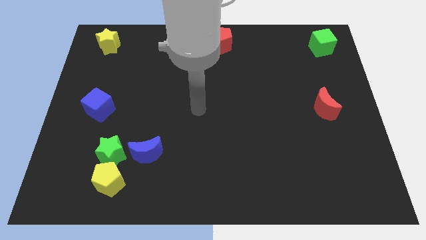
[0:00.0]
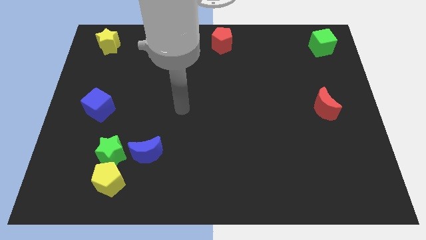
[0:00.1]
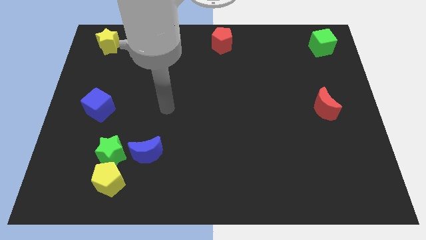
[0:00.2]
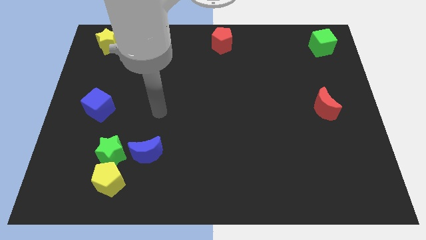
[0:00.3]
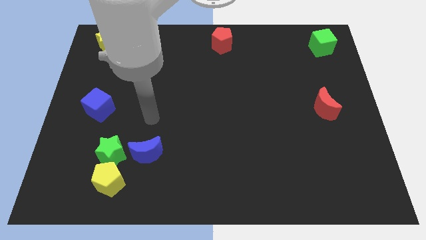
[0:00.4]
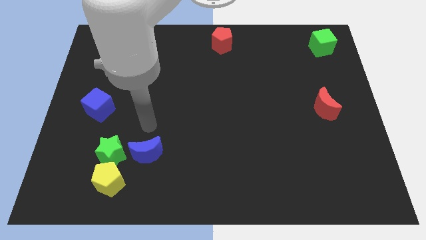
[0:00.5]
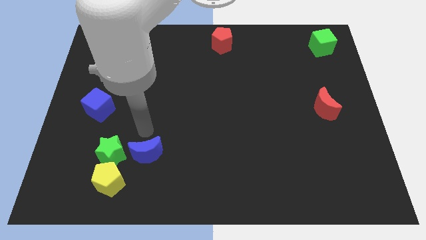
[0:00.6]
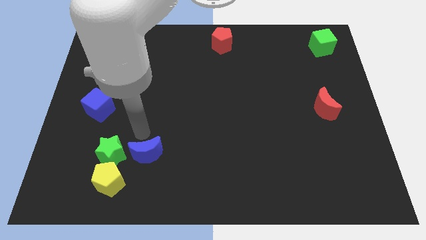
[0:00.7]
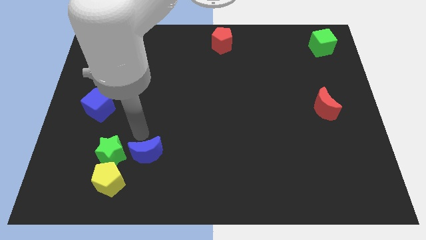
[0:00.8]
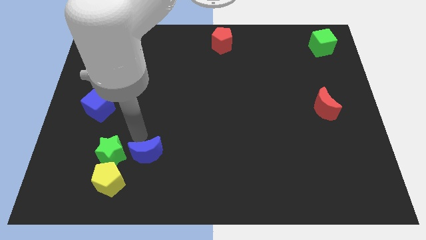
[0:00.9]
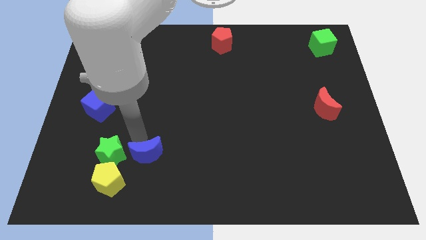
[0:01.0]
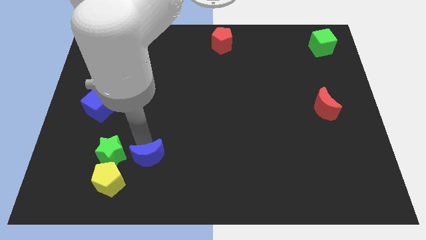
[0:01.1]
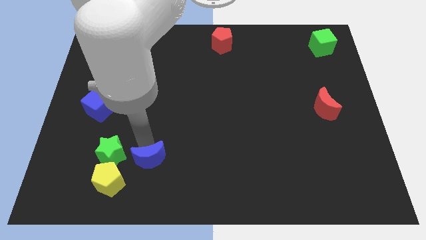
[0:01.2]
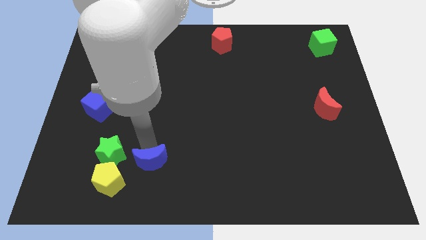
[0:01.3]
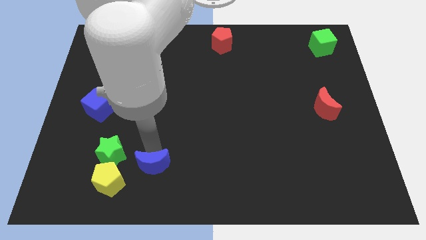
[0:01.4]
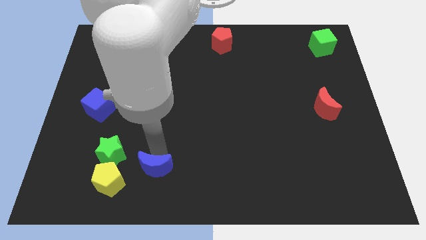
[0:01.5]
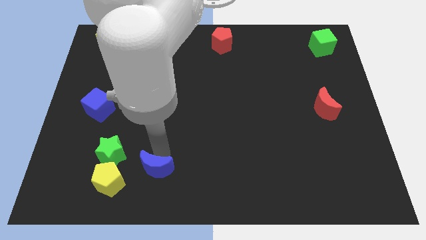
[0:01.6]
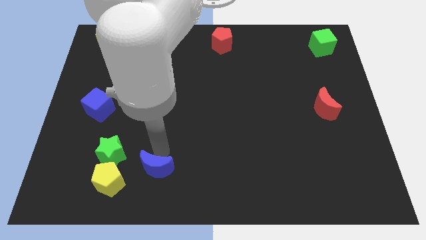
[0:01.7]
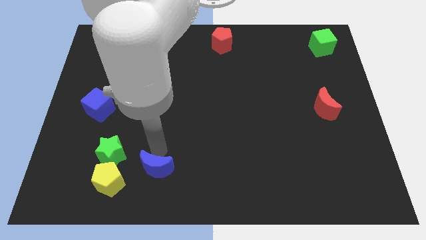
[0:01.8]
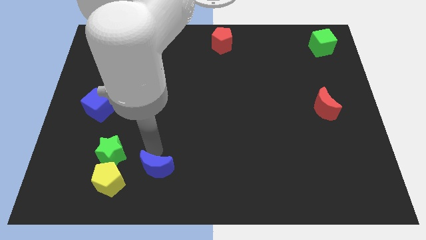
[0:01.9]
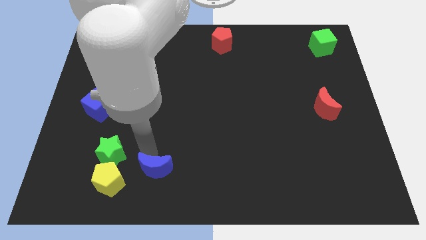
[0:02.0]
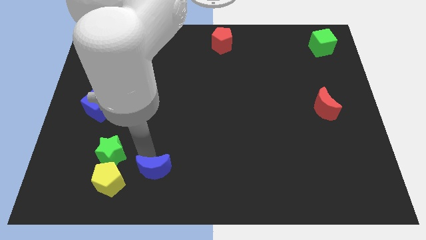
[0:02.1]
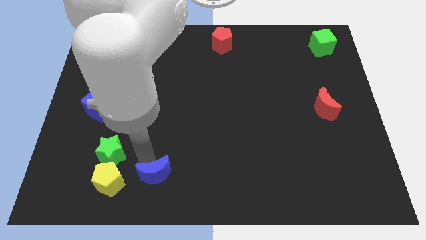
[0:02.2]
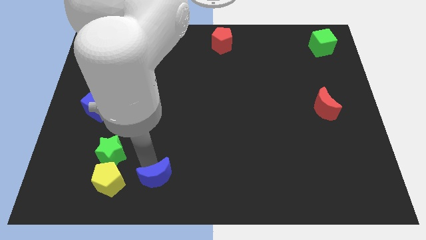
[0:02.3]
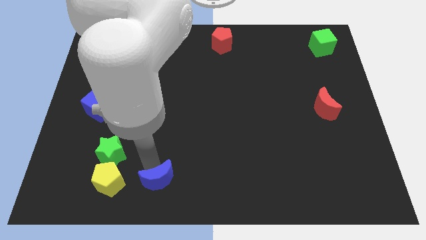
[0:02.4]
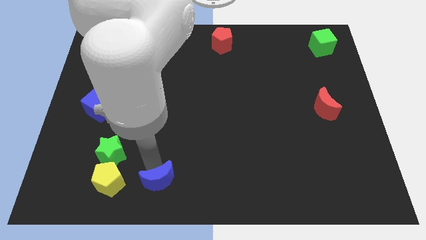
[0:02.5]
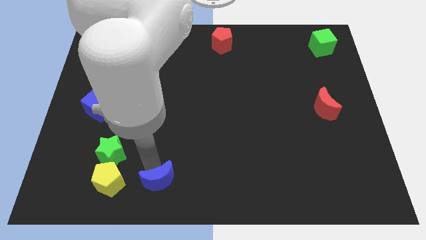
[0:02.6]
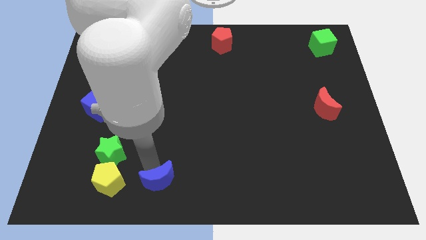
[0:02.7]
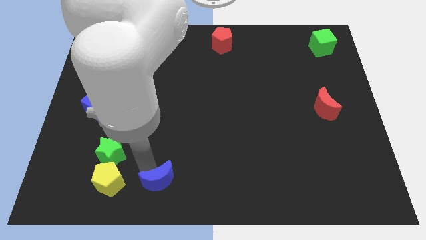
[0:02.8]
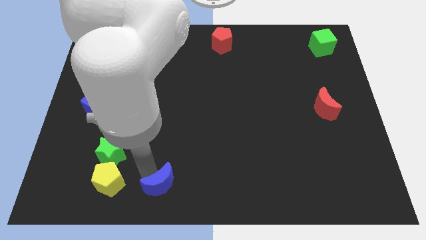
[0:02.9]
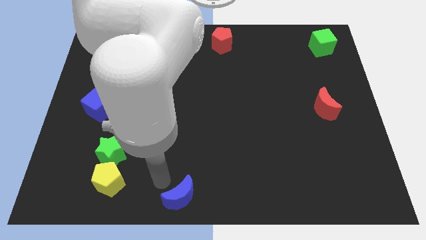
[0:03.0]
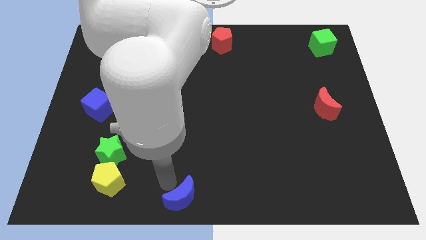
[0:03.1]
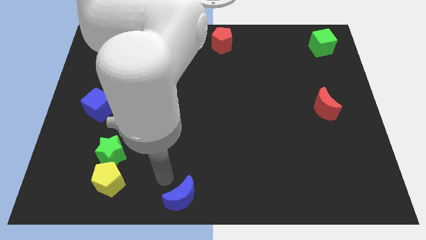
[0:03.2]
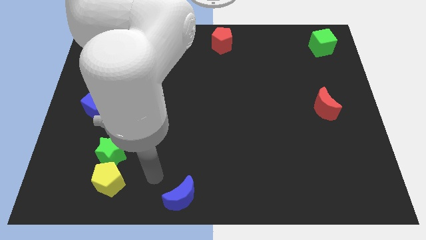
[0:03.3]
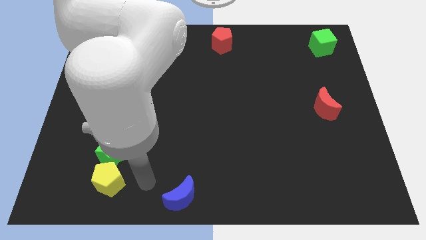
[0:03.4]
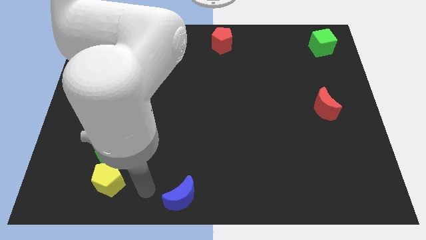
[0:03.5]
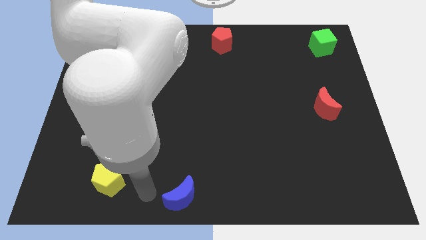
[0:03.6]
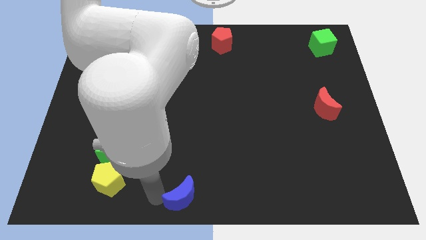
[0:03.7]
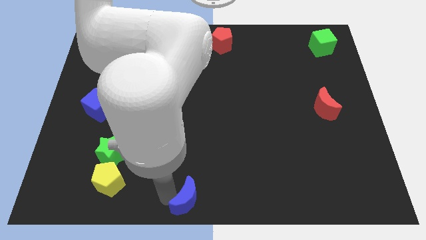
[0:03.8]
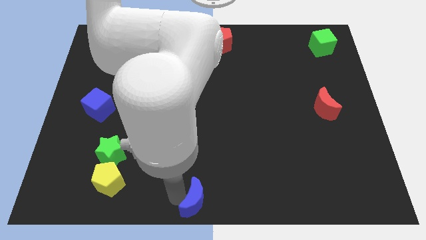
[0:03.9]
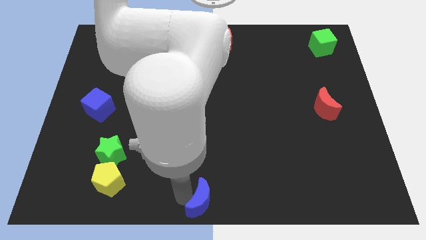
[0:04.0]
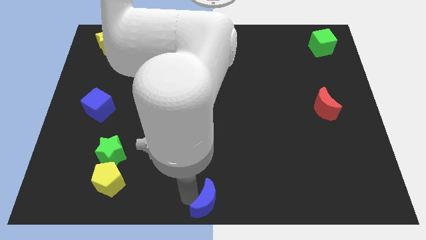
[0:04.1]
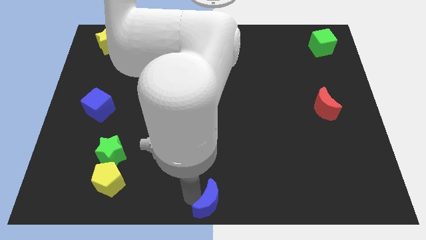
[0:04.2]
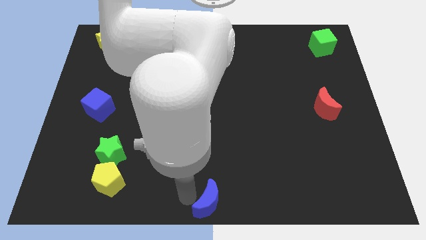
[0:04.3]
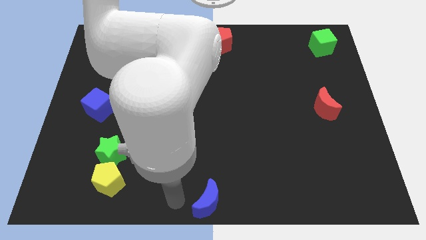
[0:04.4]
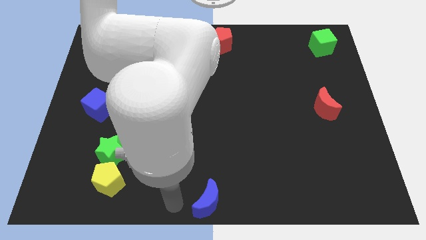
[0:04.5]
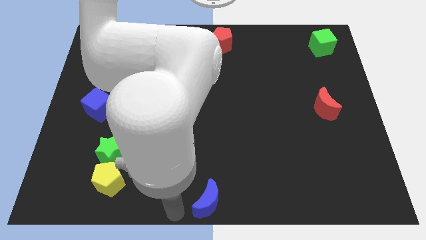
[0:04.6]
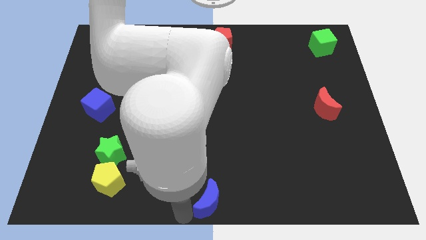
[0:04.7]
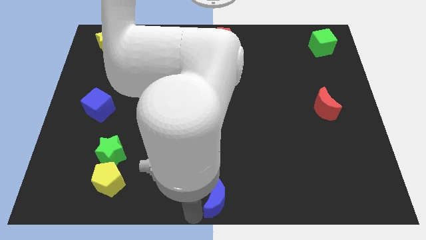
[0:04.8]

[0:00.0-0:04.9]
place the blue moon to the bottom center of the board

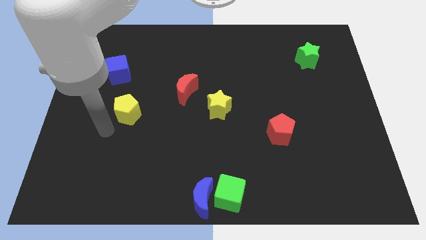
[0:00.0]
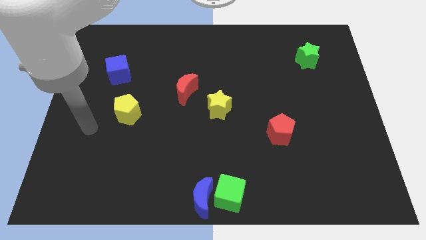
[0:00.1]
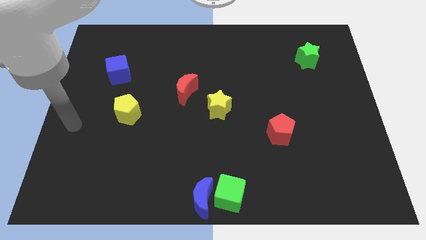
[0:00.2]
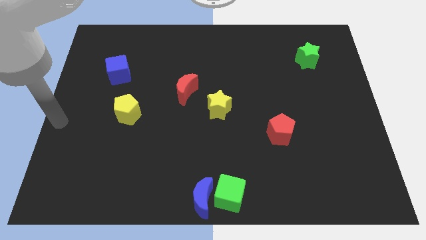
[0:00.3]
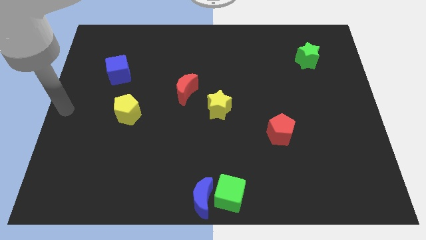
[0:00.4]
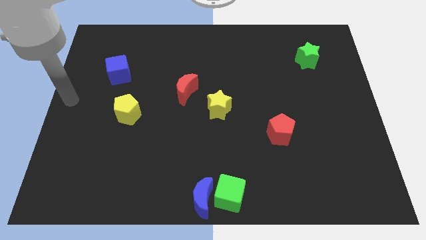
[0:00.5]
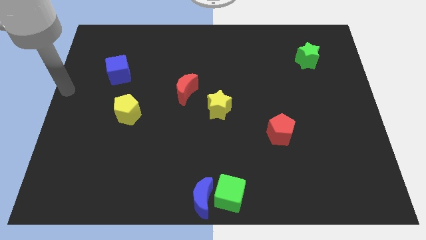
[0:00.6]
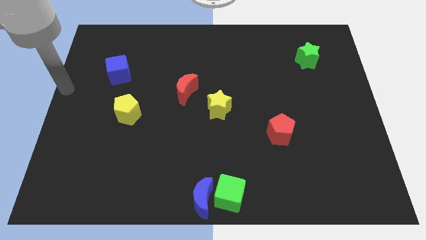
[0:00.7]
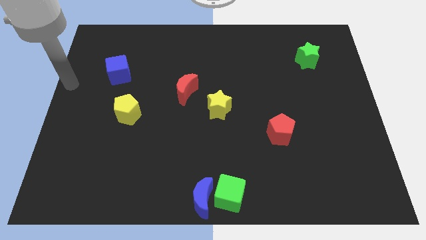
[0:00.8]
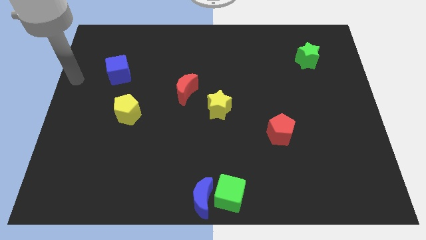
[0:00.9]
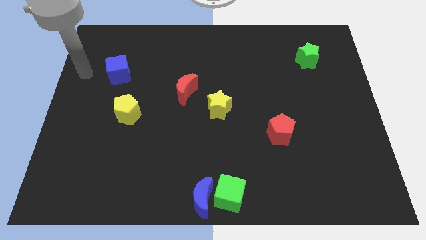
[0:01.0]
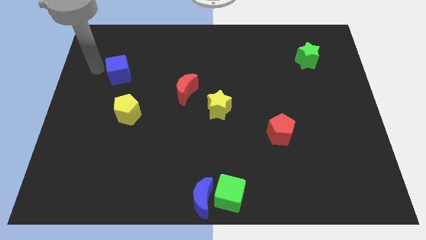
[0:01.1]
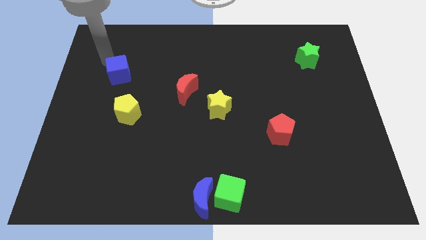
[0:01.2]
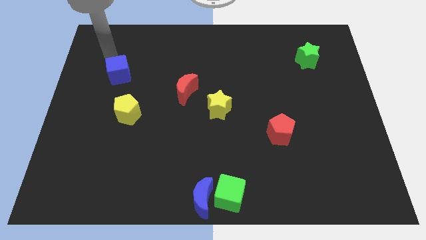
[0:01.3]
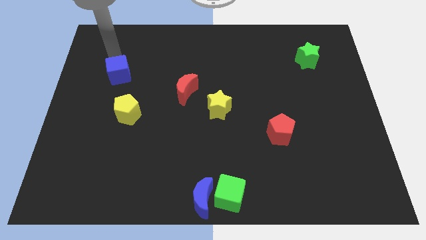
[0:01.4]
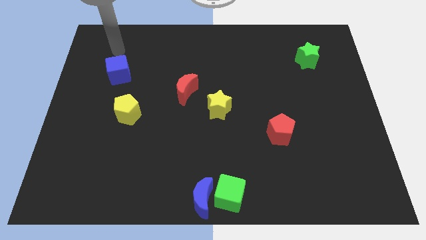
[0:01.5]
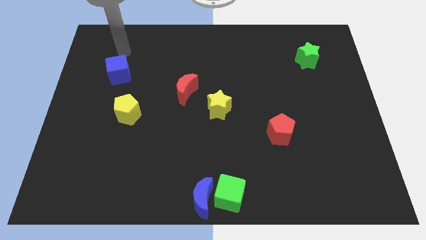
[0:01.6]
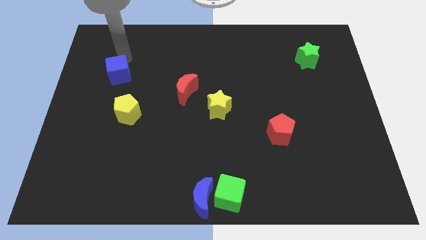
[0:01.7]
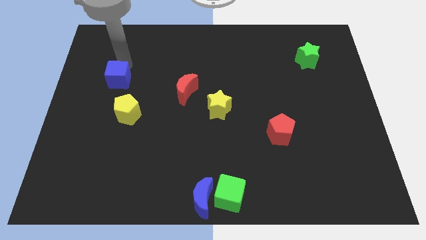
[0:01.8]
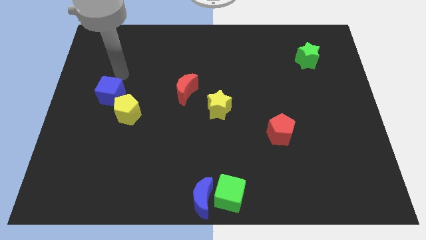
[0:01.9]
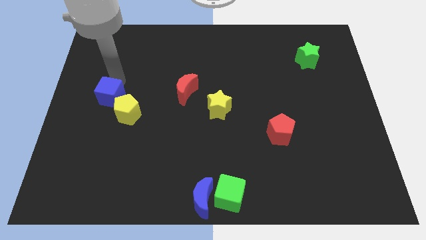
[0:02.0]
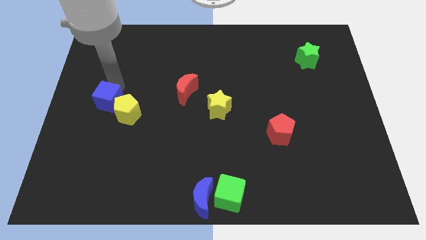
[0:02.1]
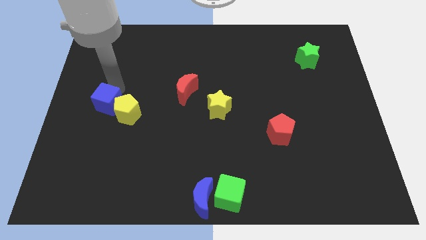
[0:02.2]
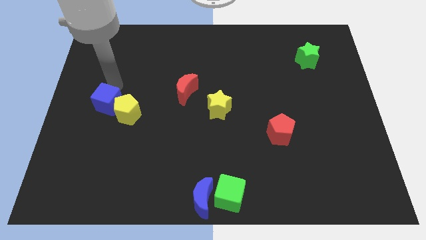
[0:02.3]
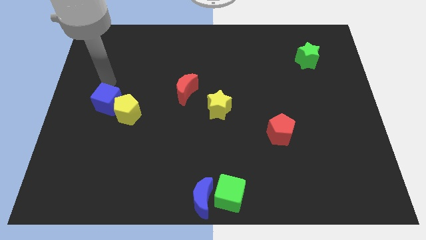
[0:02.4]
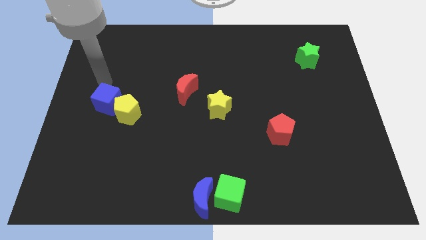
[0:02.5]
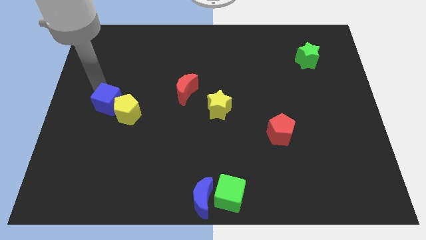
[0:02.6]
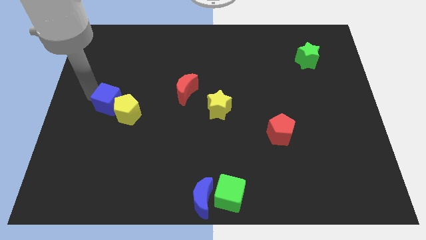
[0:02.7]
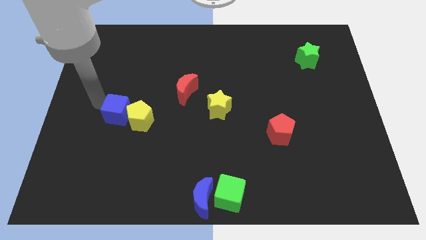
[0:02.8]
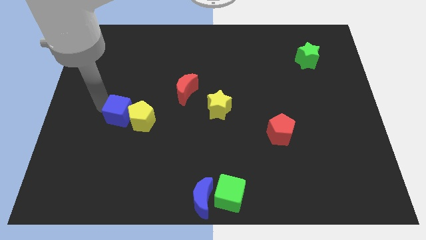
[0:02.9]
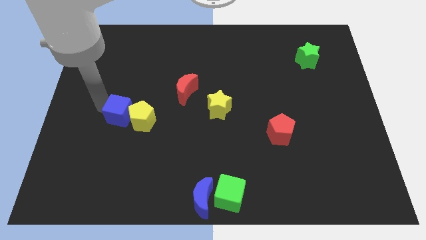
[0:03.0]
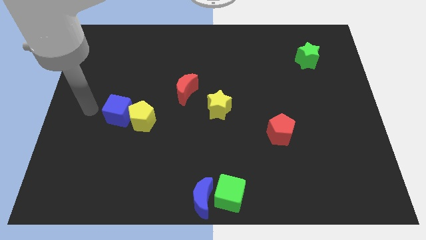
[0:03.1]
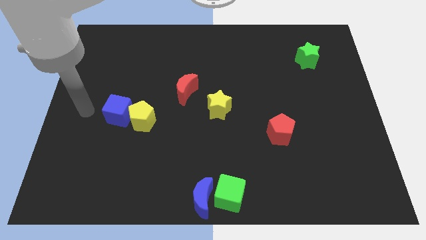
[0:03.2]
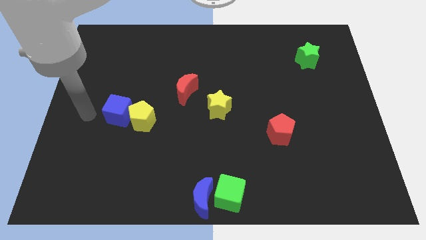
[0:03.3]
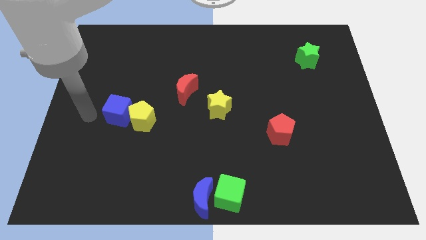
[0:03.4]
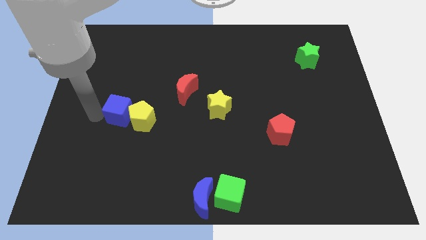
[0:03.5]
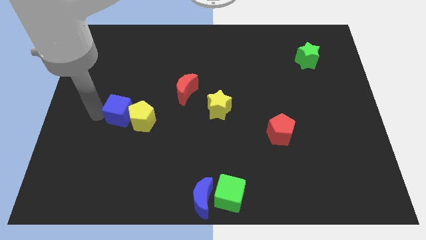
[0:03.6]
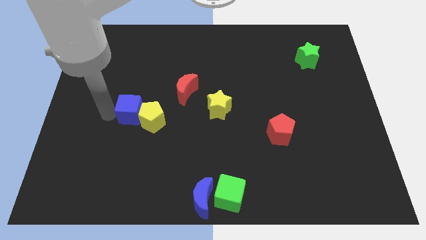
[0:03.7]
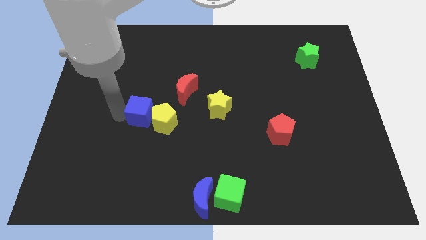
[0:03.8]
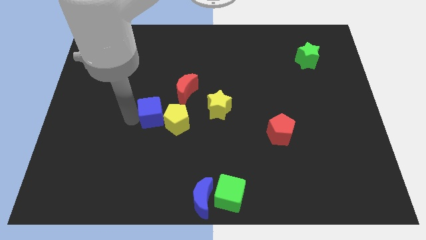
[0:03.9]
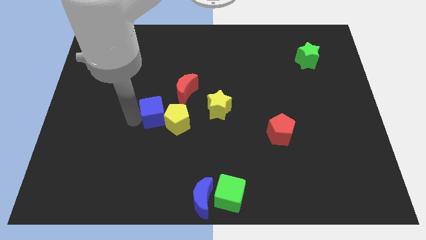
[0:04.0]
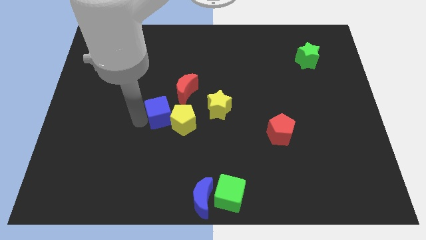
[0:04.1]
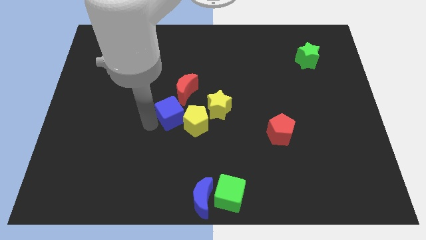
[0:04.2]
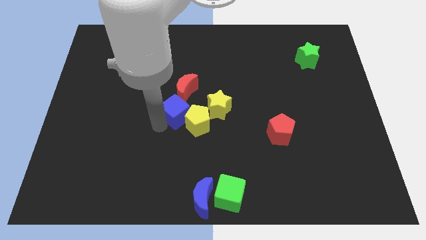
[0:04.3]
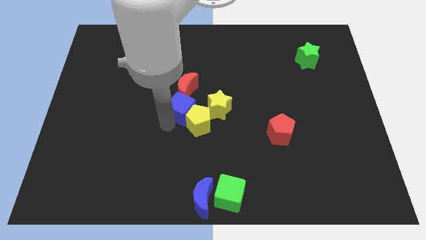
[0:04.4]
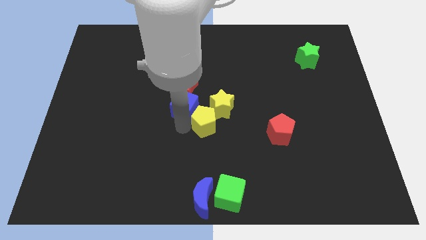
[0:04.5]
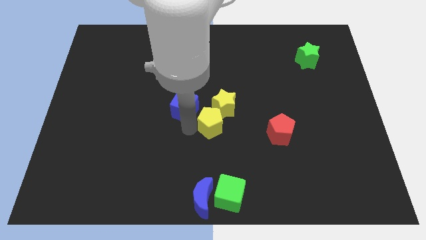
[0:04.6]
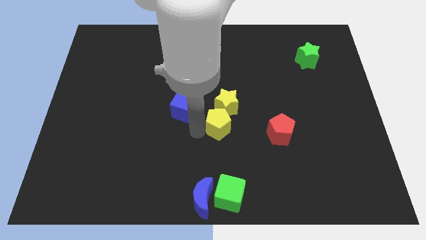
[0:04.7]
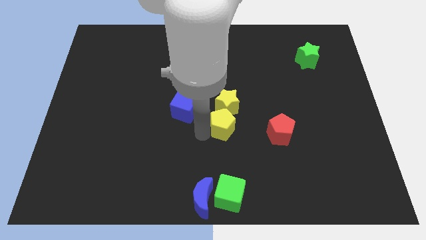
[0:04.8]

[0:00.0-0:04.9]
move the yellow pentagon and the blue cube towards the center of the board
